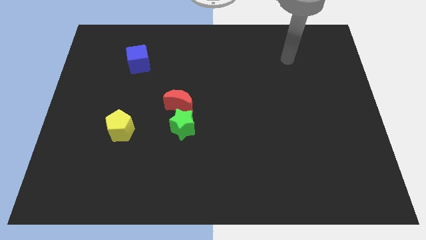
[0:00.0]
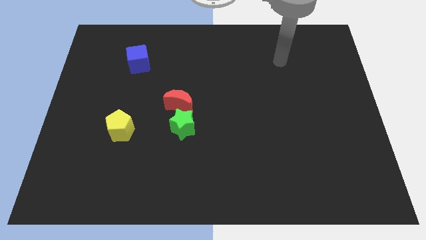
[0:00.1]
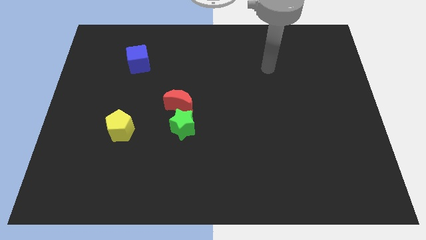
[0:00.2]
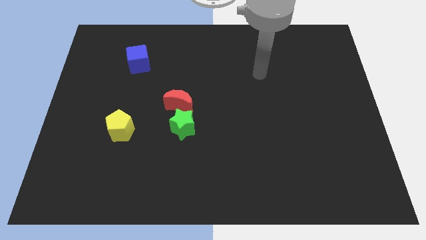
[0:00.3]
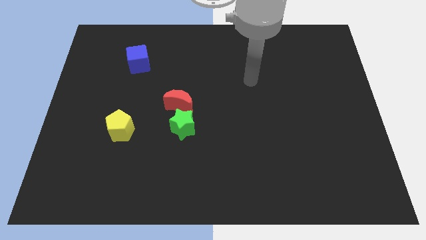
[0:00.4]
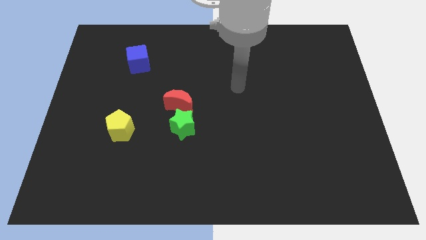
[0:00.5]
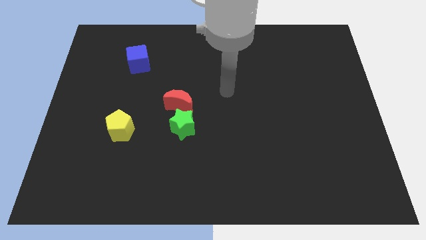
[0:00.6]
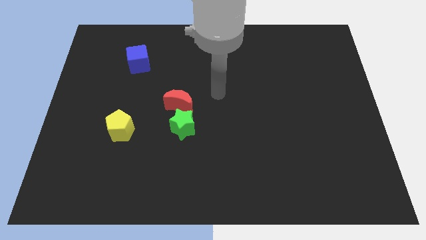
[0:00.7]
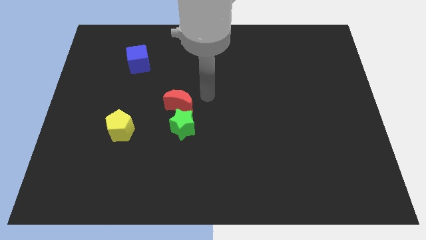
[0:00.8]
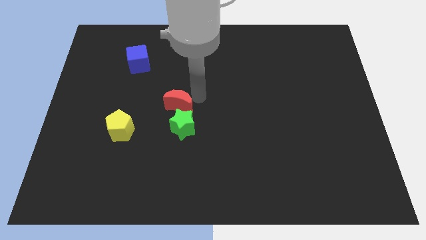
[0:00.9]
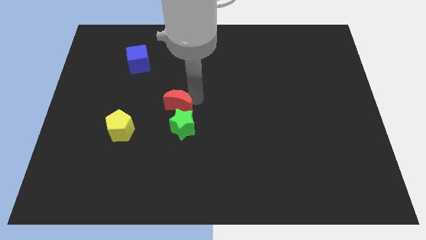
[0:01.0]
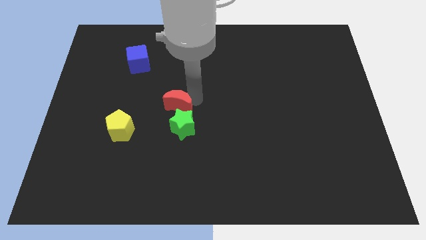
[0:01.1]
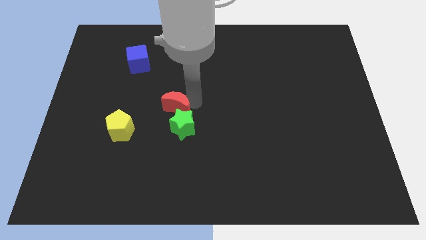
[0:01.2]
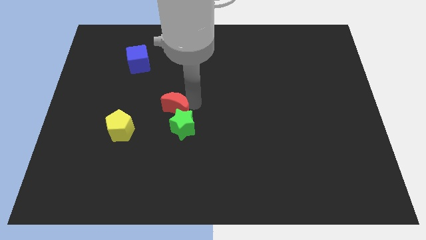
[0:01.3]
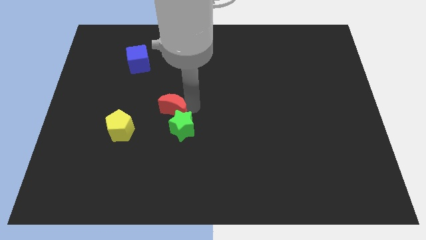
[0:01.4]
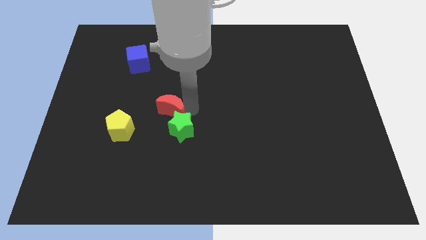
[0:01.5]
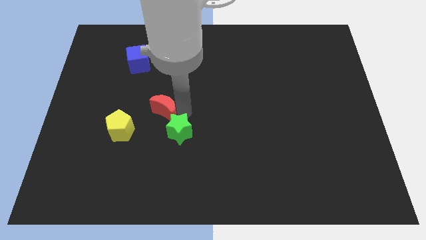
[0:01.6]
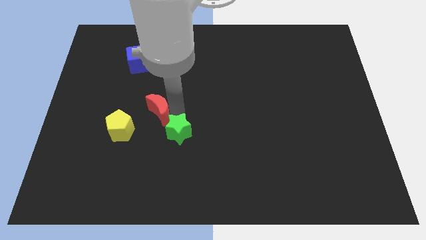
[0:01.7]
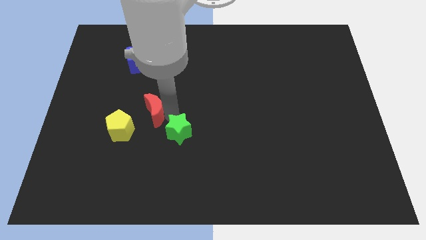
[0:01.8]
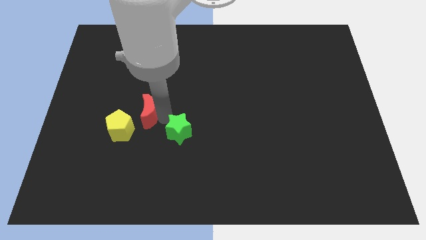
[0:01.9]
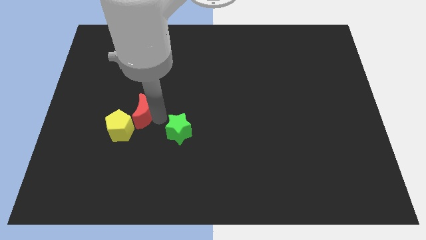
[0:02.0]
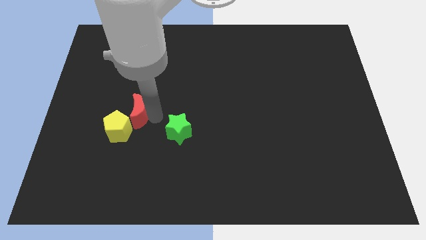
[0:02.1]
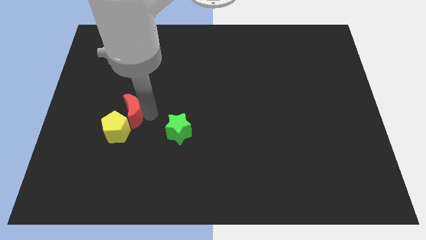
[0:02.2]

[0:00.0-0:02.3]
push the moon next to the yellow pentagon

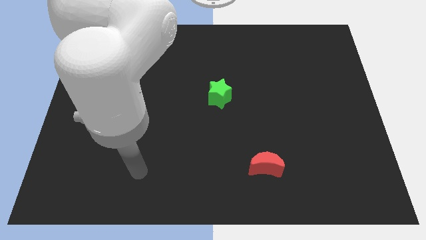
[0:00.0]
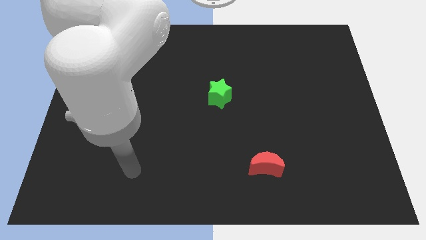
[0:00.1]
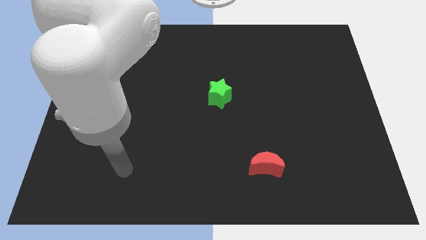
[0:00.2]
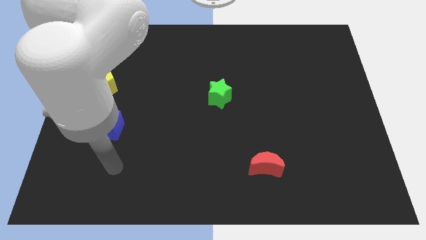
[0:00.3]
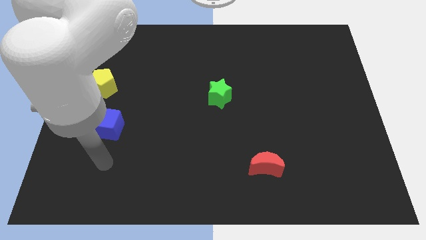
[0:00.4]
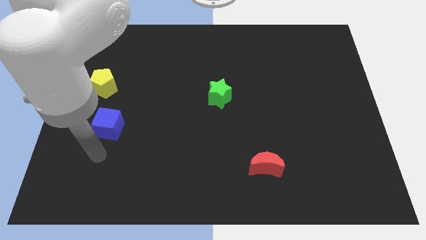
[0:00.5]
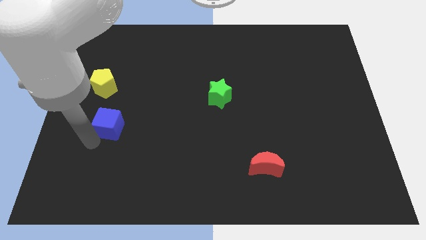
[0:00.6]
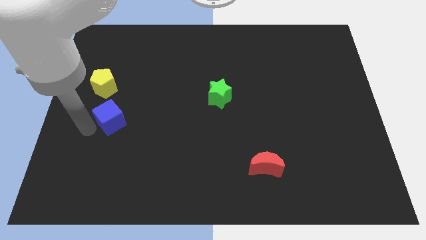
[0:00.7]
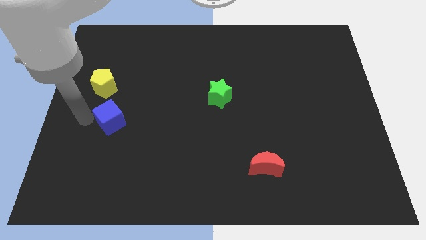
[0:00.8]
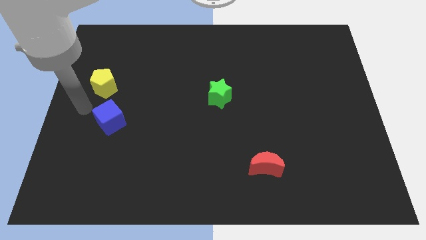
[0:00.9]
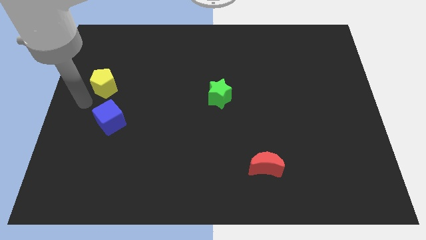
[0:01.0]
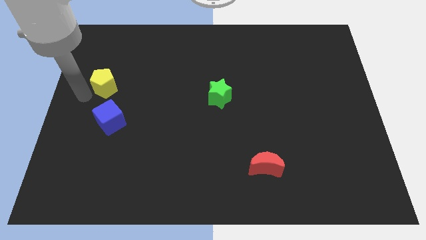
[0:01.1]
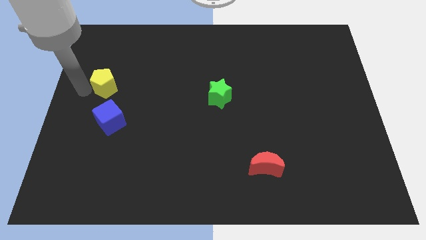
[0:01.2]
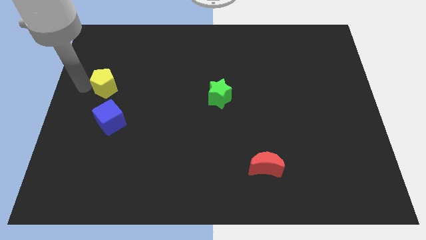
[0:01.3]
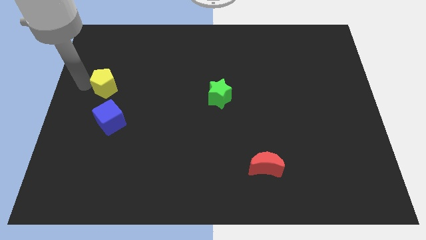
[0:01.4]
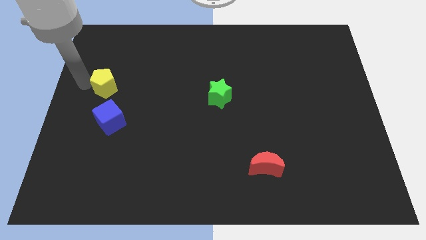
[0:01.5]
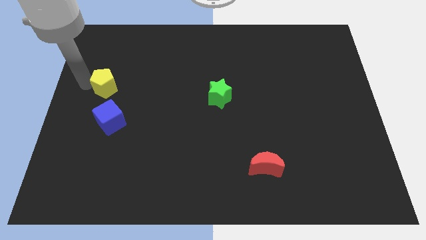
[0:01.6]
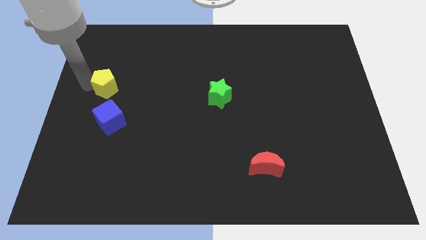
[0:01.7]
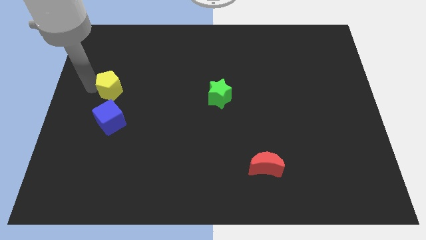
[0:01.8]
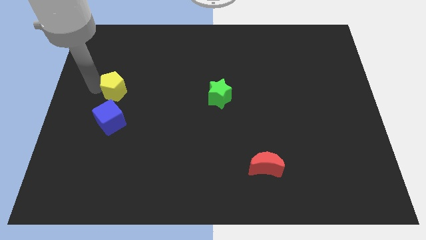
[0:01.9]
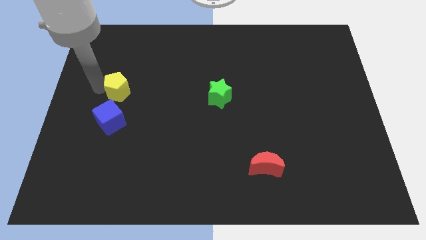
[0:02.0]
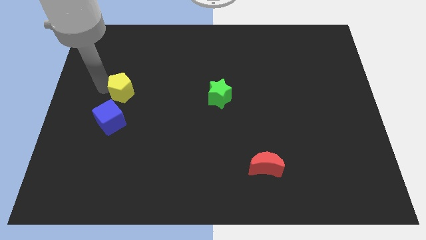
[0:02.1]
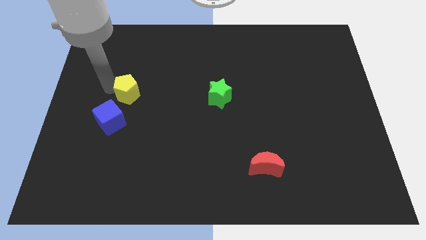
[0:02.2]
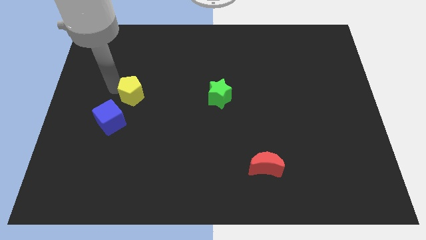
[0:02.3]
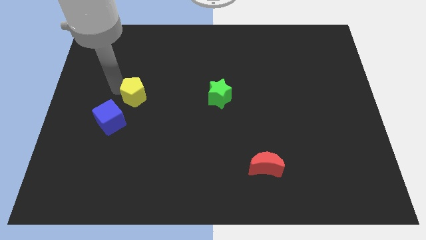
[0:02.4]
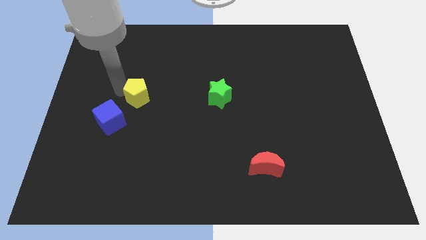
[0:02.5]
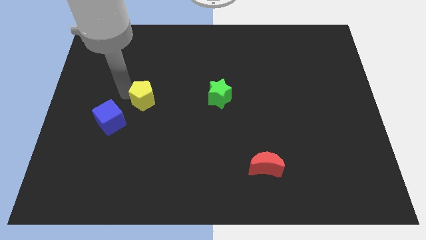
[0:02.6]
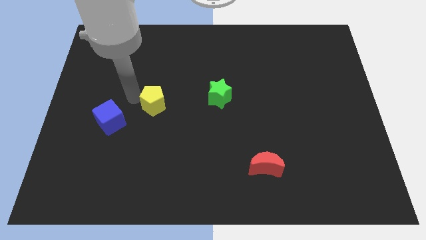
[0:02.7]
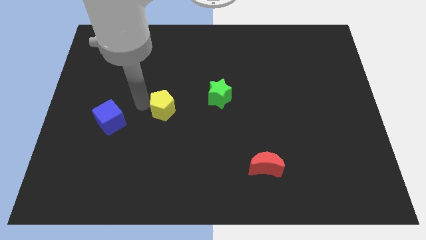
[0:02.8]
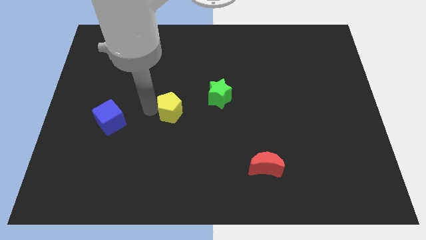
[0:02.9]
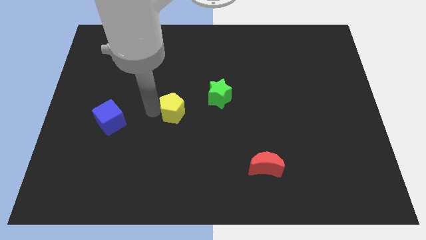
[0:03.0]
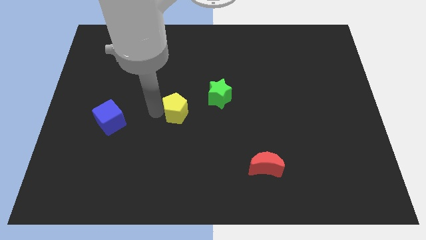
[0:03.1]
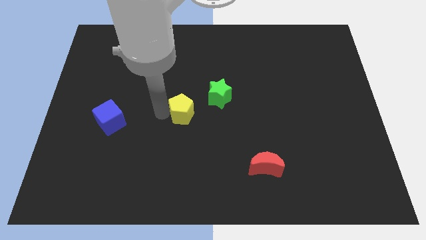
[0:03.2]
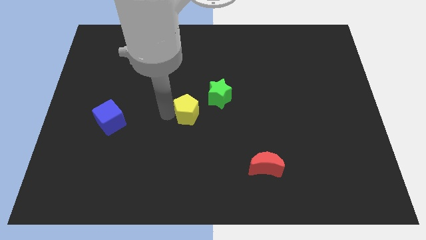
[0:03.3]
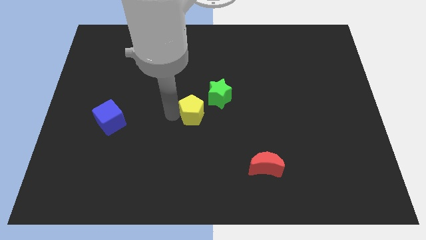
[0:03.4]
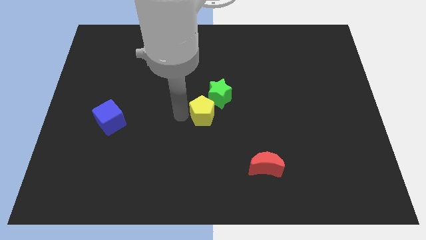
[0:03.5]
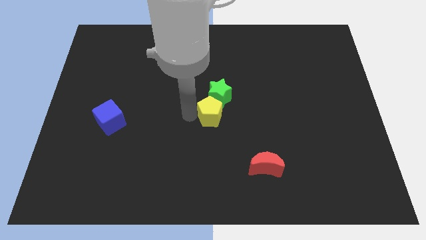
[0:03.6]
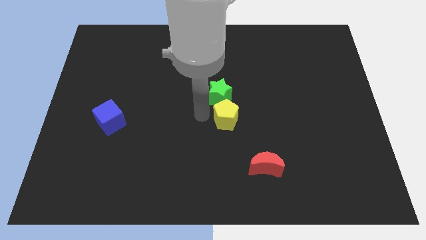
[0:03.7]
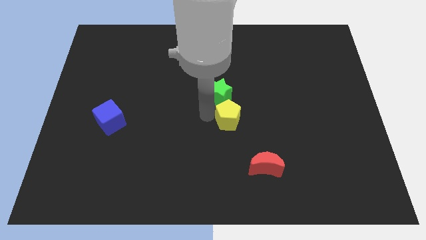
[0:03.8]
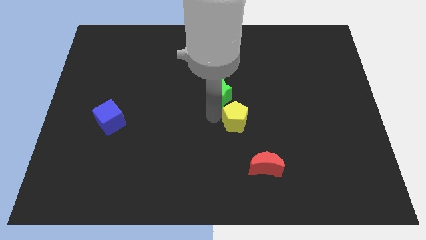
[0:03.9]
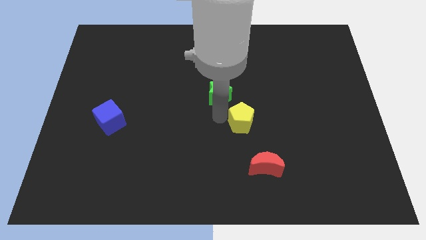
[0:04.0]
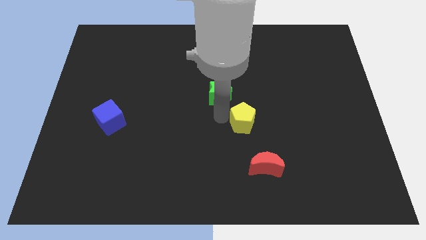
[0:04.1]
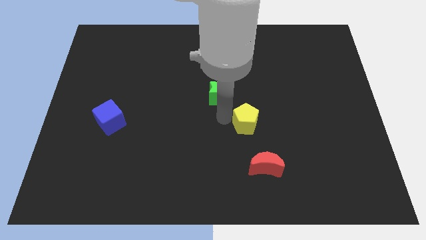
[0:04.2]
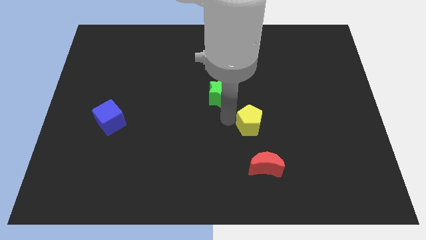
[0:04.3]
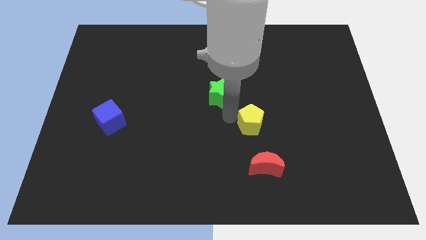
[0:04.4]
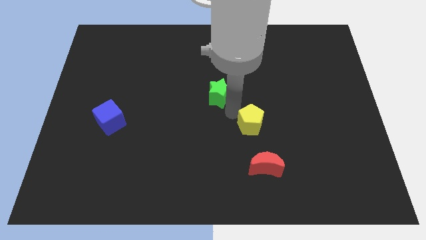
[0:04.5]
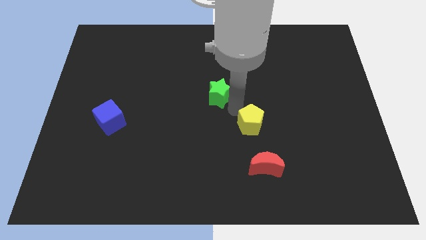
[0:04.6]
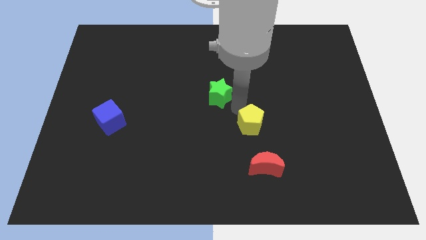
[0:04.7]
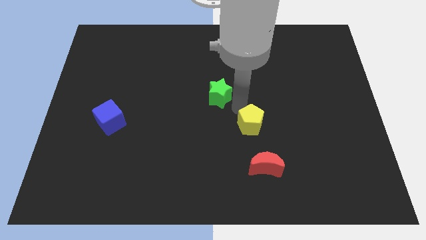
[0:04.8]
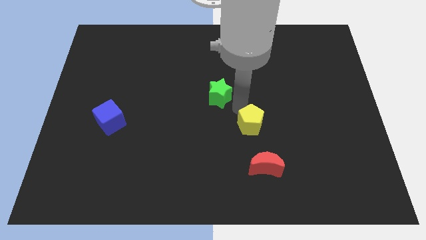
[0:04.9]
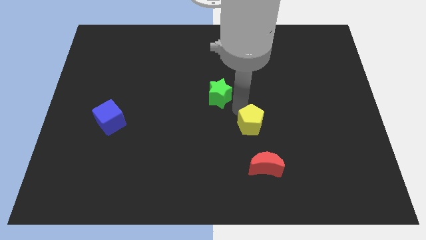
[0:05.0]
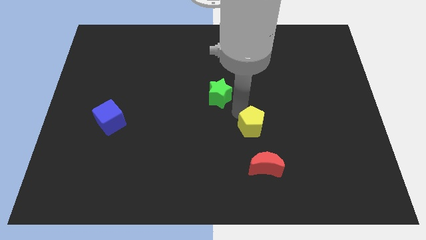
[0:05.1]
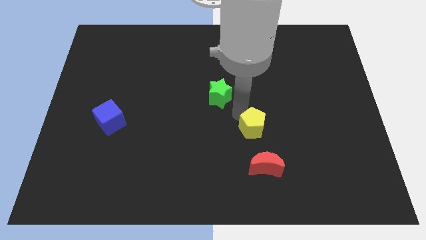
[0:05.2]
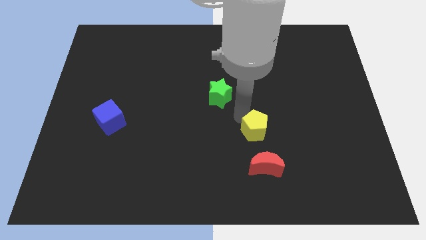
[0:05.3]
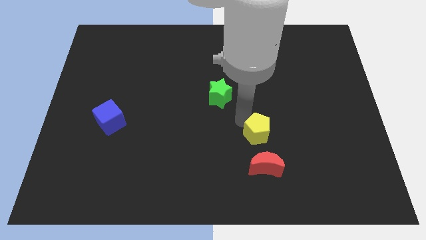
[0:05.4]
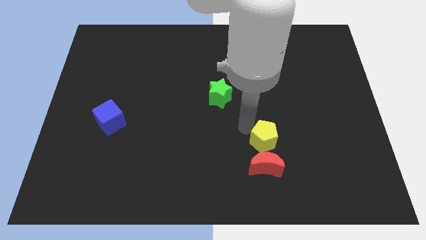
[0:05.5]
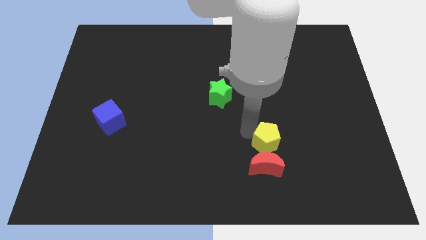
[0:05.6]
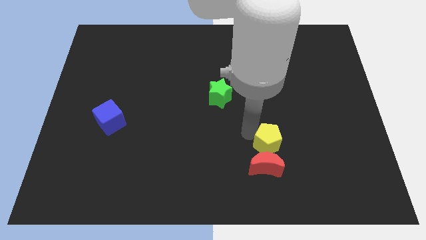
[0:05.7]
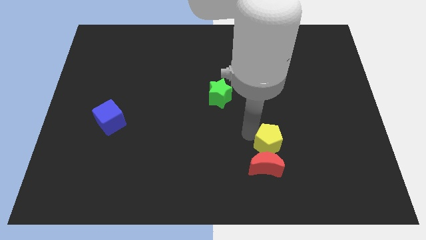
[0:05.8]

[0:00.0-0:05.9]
push the yellow pentagon close to the moon

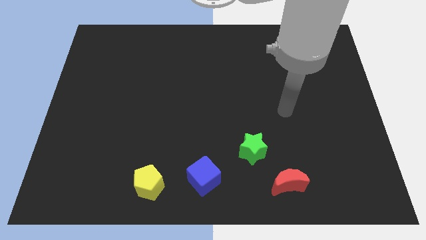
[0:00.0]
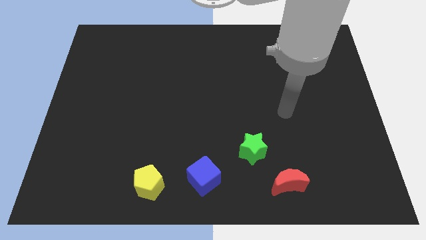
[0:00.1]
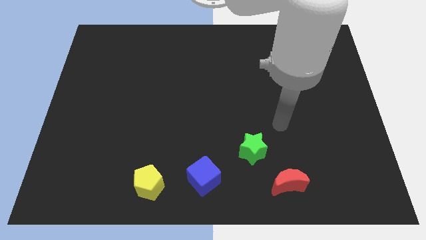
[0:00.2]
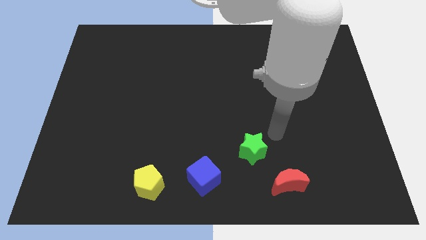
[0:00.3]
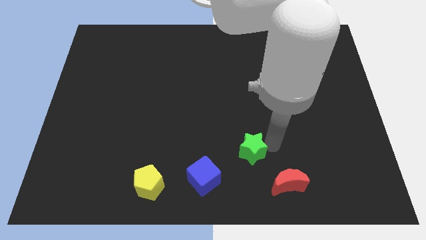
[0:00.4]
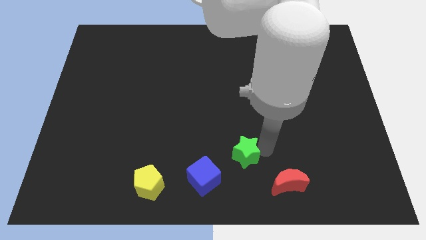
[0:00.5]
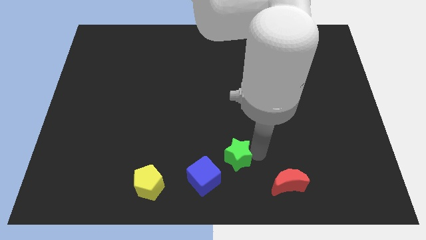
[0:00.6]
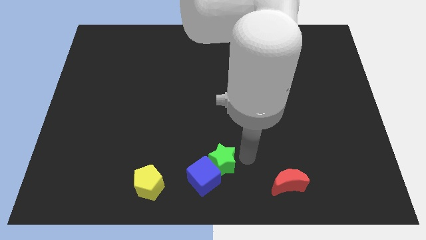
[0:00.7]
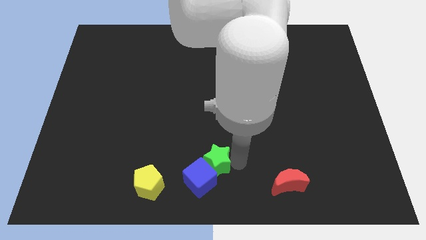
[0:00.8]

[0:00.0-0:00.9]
put the star close to the blue cube
